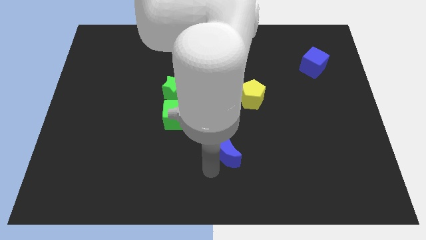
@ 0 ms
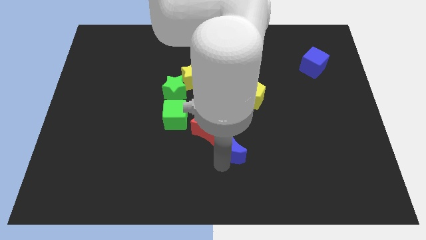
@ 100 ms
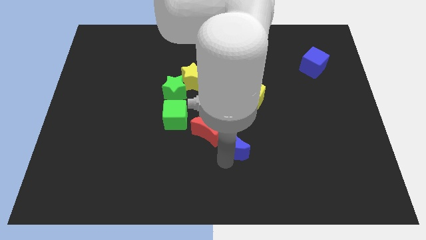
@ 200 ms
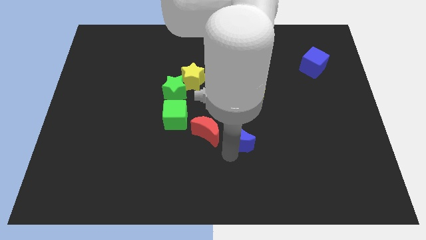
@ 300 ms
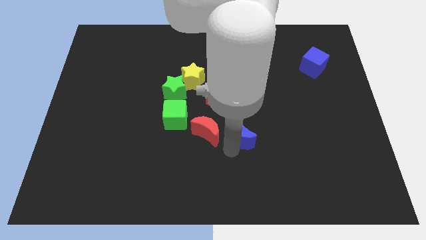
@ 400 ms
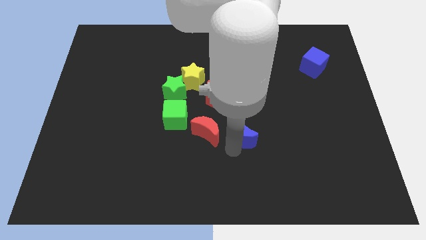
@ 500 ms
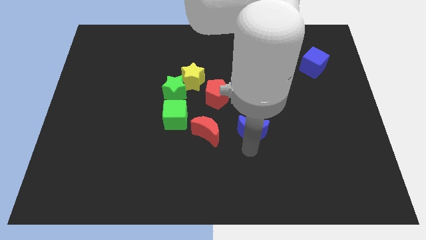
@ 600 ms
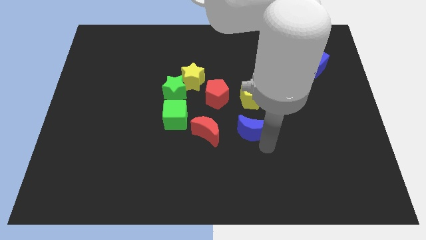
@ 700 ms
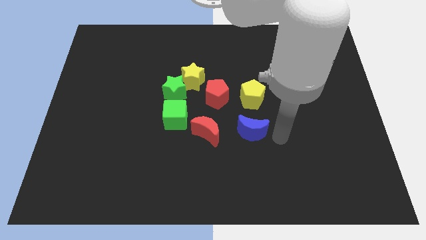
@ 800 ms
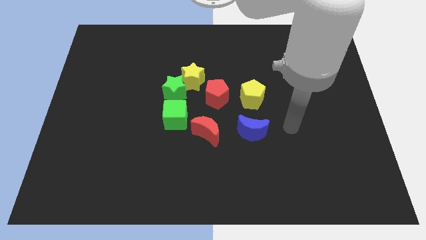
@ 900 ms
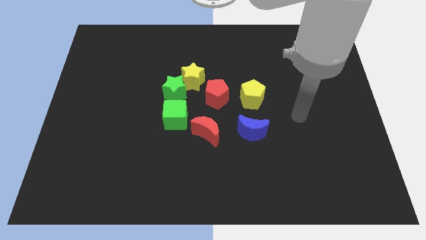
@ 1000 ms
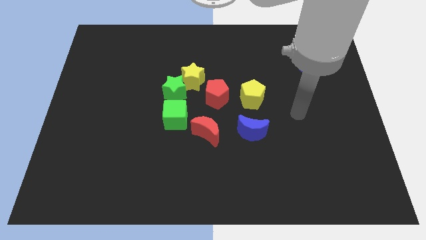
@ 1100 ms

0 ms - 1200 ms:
place the blue crescent vertically below the yellow pentagon

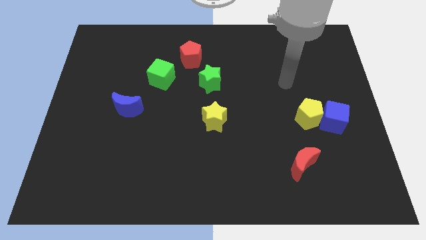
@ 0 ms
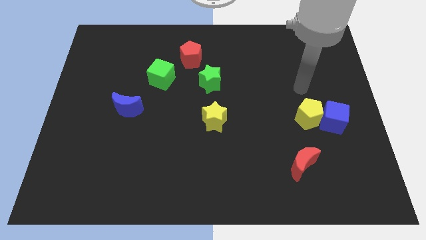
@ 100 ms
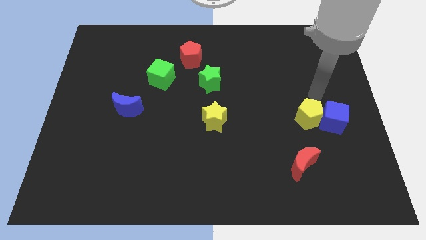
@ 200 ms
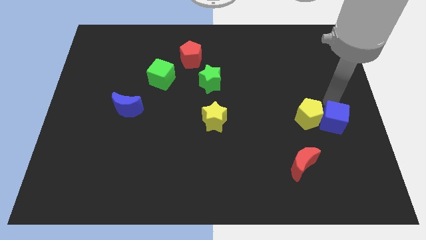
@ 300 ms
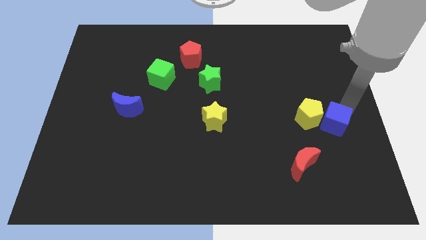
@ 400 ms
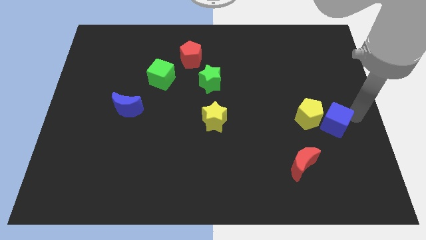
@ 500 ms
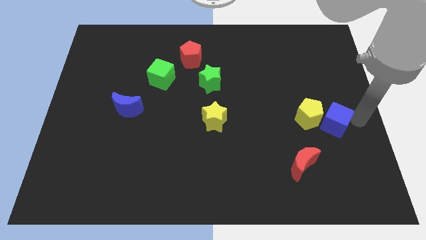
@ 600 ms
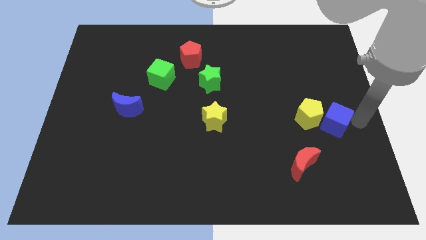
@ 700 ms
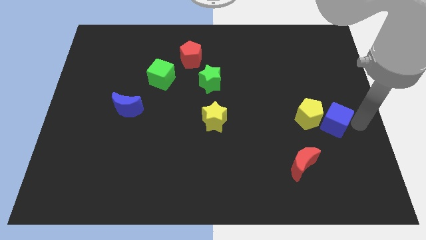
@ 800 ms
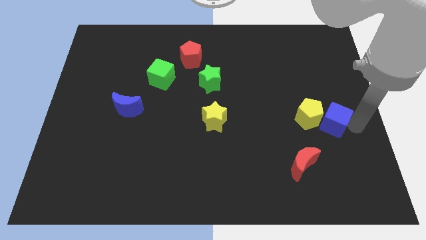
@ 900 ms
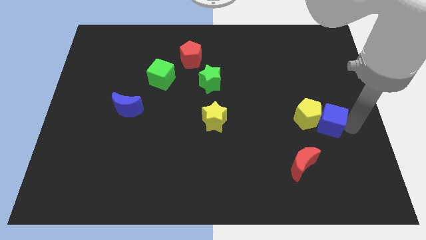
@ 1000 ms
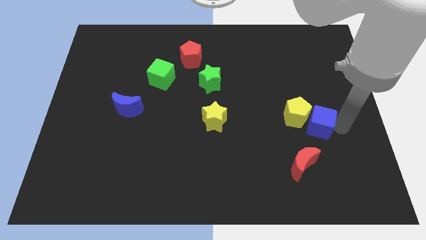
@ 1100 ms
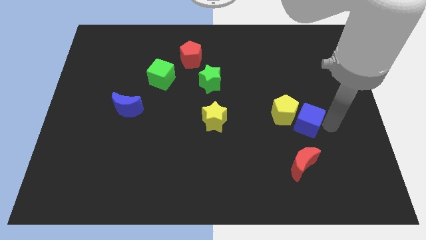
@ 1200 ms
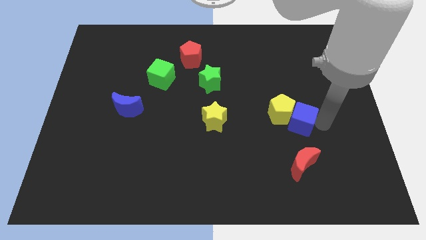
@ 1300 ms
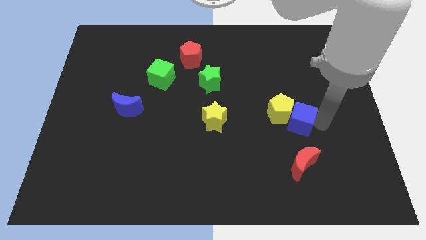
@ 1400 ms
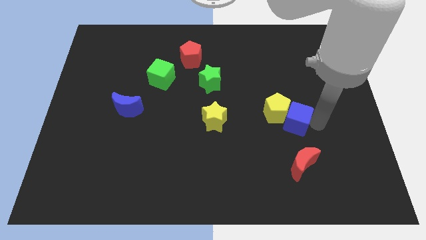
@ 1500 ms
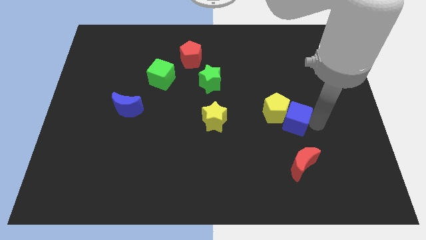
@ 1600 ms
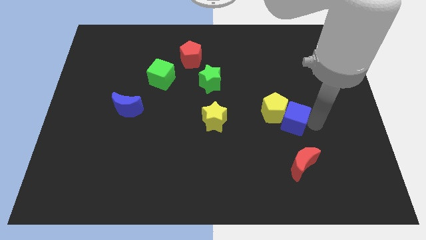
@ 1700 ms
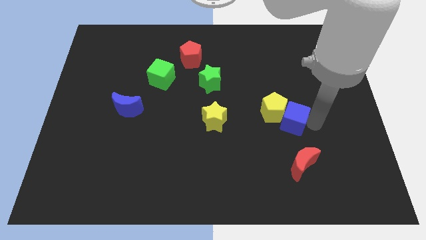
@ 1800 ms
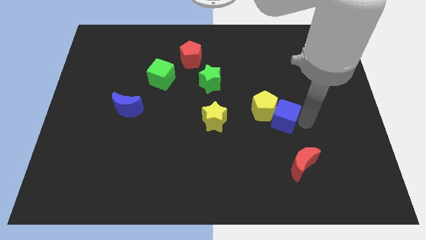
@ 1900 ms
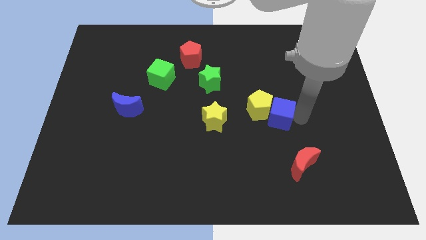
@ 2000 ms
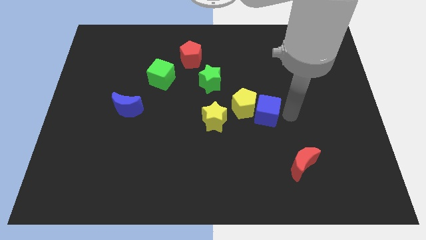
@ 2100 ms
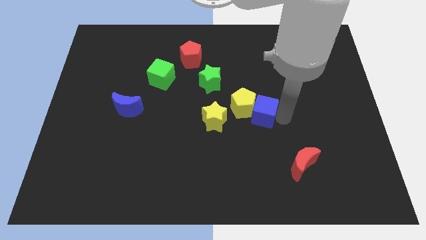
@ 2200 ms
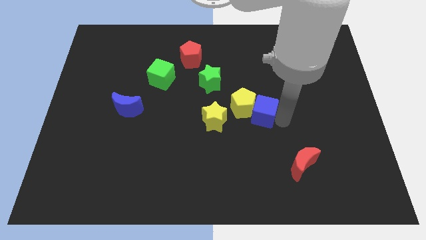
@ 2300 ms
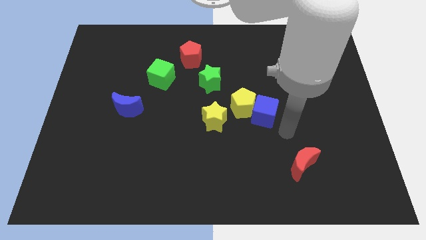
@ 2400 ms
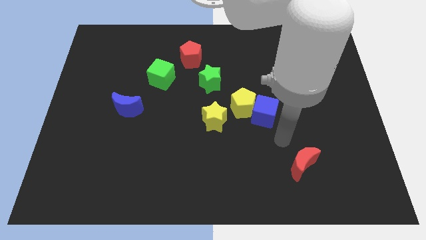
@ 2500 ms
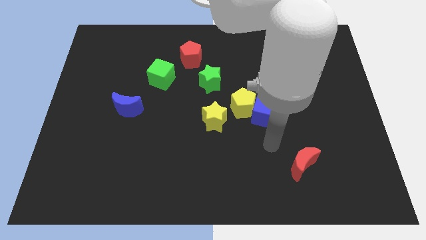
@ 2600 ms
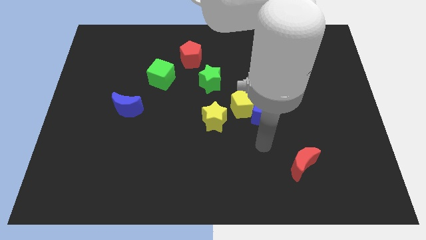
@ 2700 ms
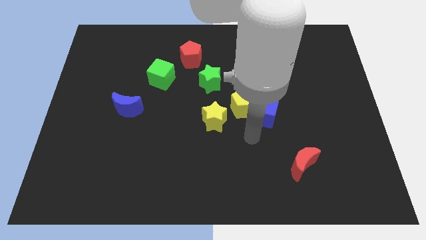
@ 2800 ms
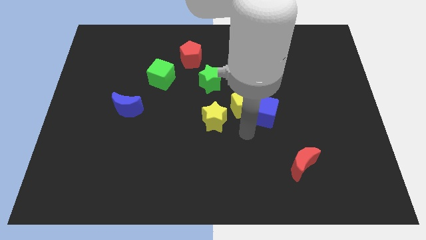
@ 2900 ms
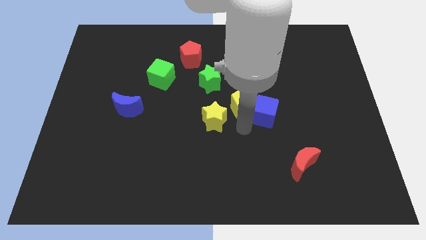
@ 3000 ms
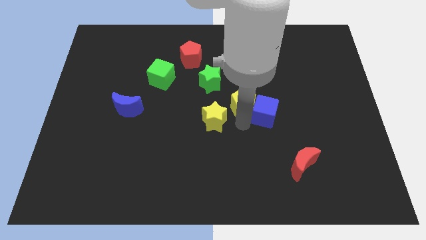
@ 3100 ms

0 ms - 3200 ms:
push the blue cube along with yellow pentagon towards center

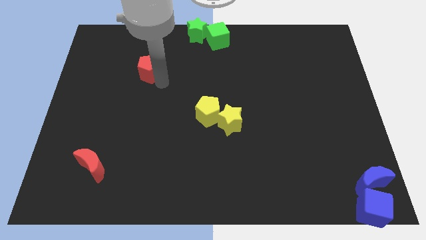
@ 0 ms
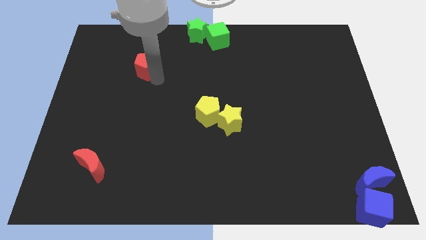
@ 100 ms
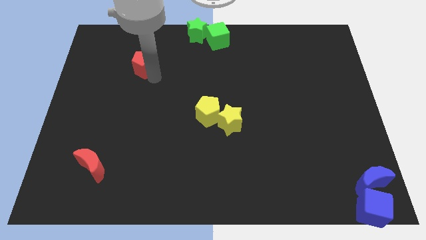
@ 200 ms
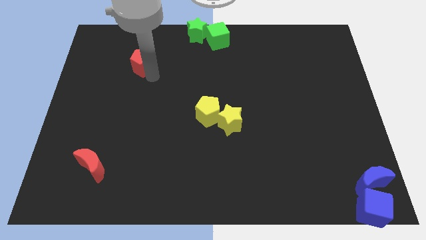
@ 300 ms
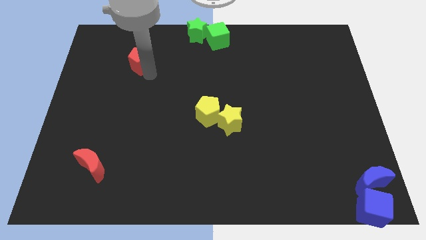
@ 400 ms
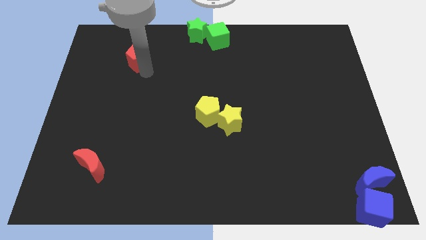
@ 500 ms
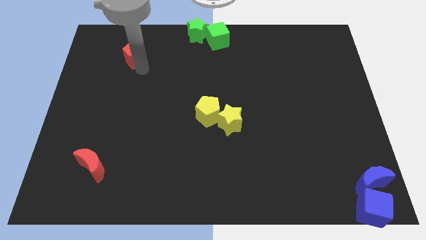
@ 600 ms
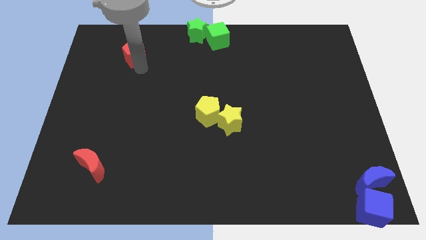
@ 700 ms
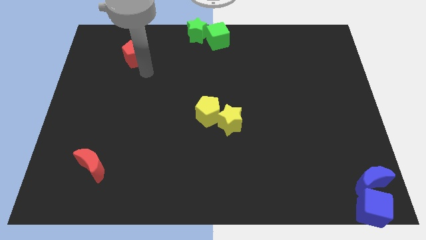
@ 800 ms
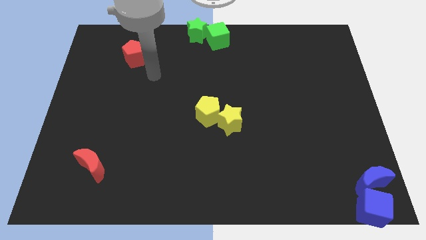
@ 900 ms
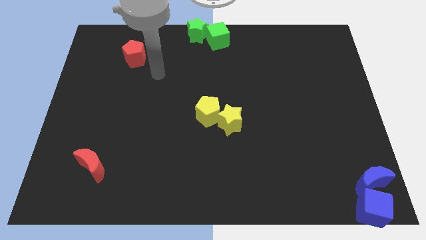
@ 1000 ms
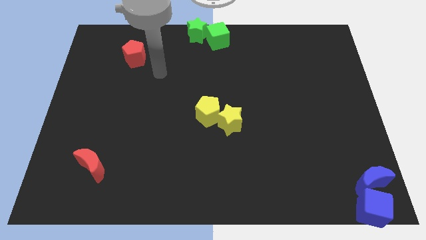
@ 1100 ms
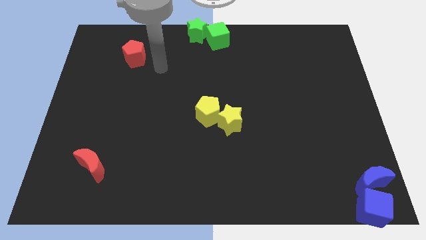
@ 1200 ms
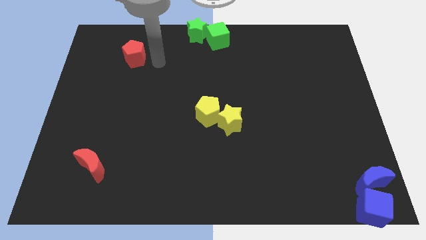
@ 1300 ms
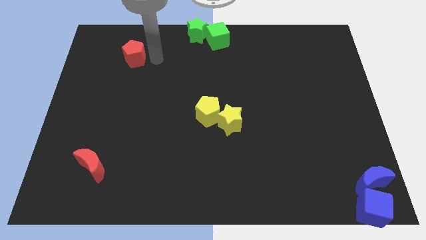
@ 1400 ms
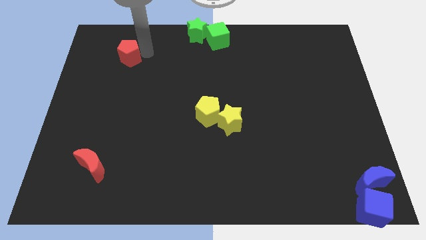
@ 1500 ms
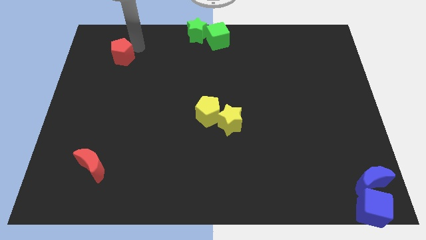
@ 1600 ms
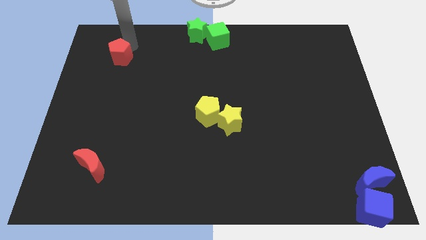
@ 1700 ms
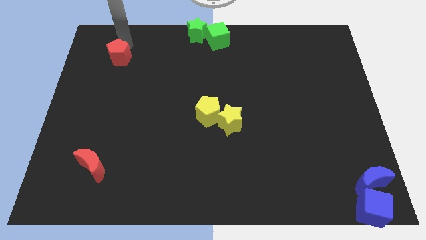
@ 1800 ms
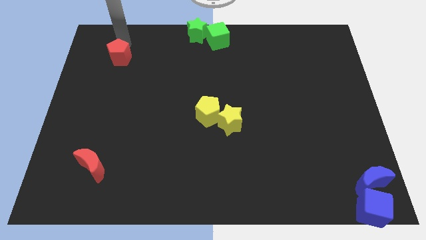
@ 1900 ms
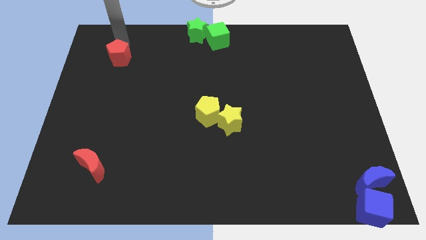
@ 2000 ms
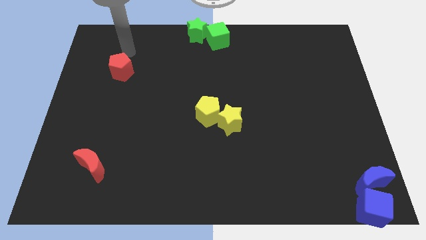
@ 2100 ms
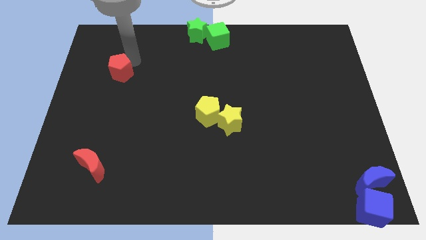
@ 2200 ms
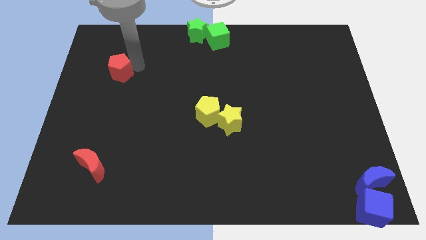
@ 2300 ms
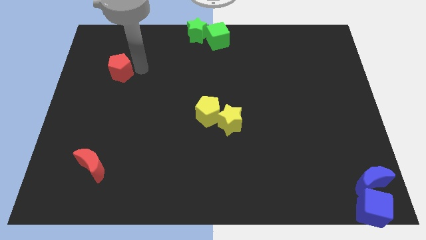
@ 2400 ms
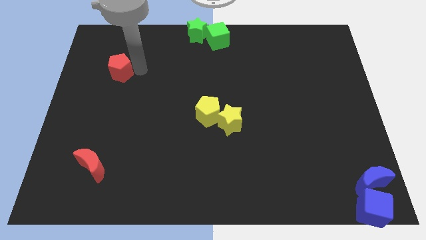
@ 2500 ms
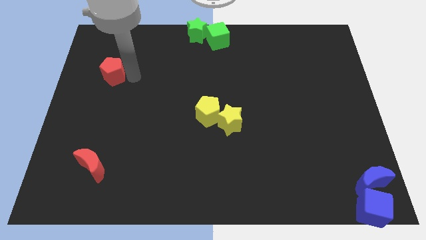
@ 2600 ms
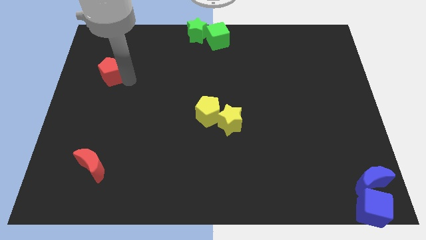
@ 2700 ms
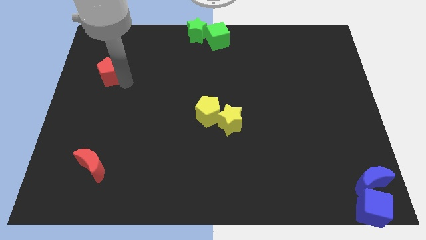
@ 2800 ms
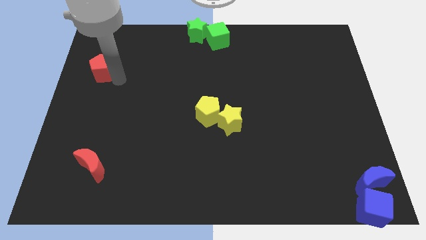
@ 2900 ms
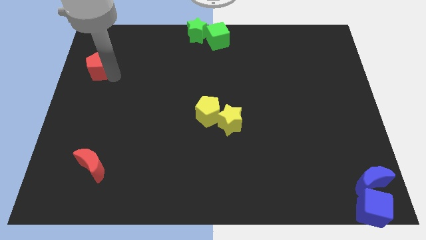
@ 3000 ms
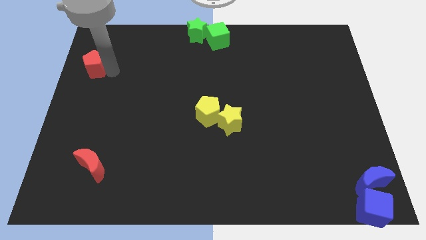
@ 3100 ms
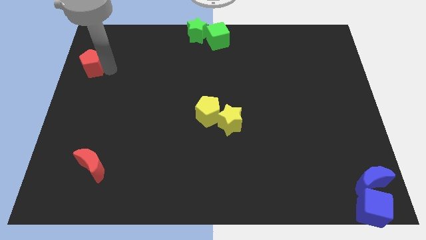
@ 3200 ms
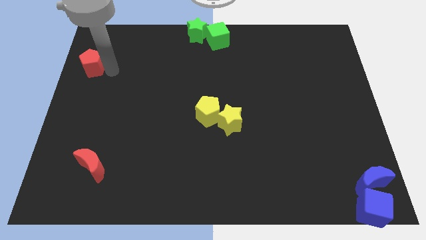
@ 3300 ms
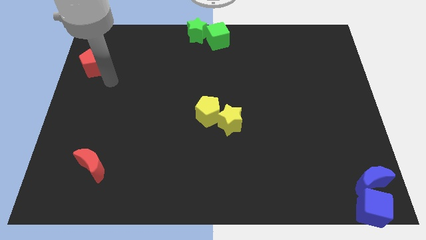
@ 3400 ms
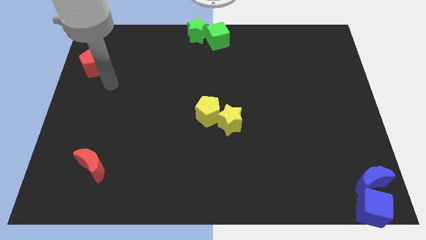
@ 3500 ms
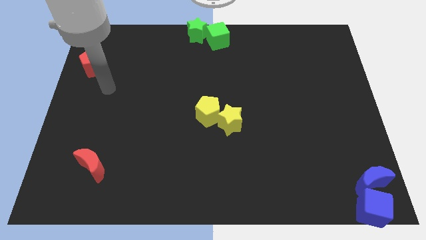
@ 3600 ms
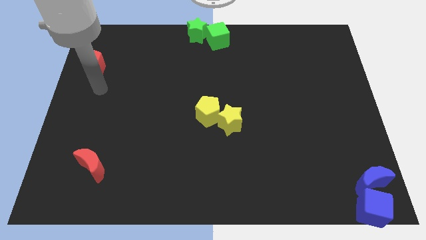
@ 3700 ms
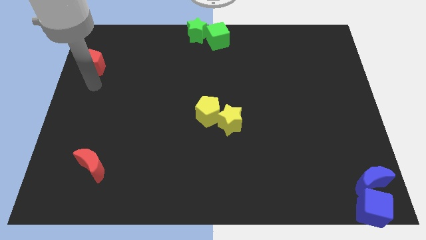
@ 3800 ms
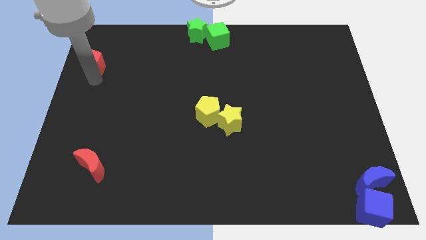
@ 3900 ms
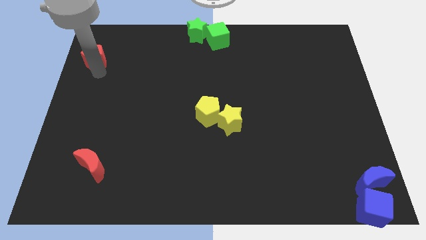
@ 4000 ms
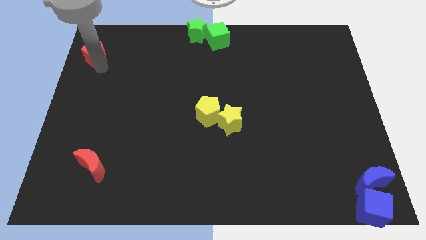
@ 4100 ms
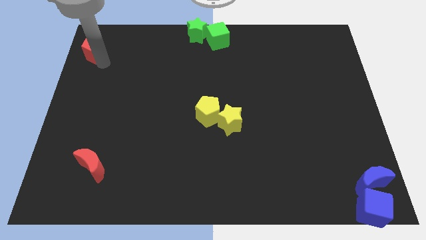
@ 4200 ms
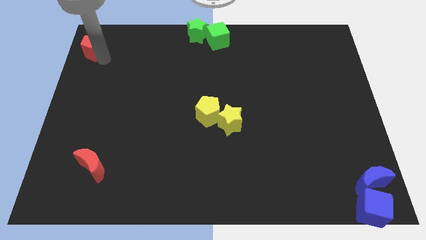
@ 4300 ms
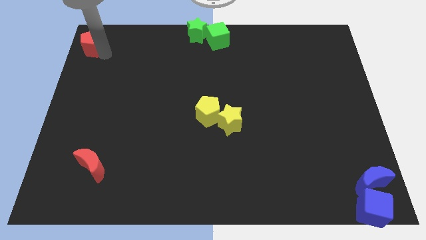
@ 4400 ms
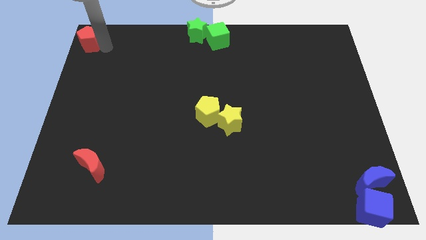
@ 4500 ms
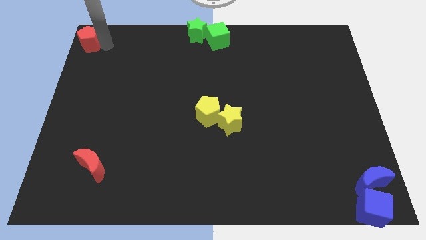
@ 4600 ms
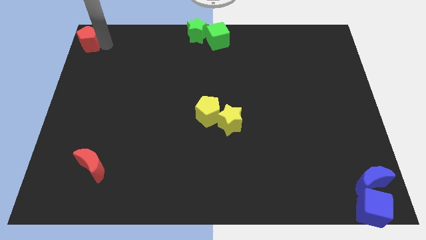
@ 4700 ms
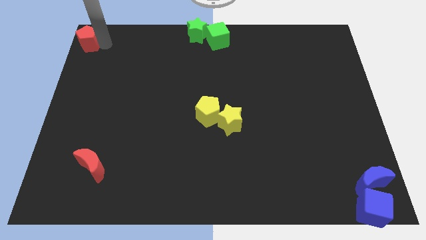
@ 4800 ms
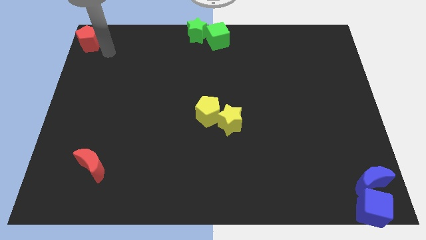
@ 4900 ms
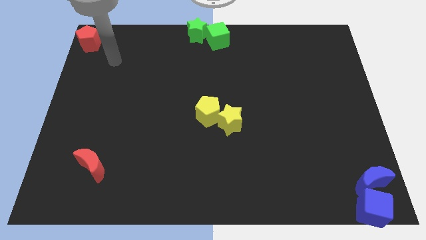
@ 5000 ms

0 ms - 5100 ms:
push the red pentagon to the top left of the board
